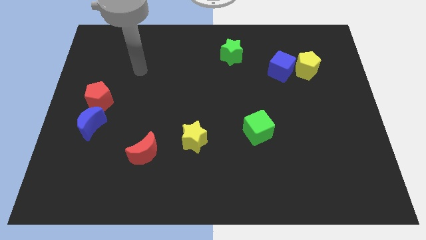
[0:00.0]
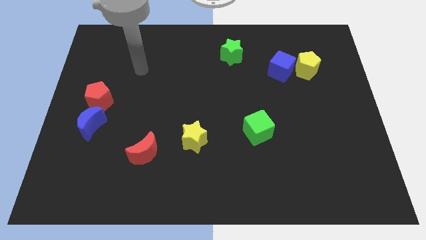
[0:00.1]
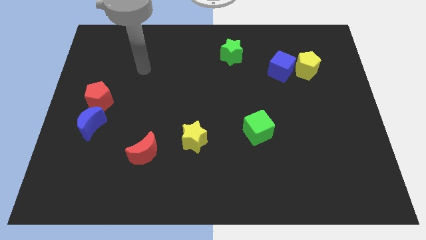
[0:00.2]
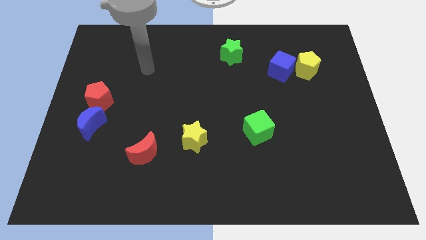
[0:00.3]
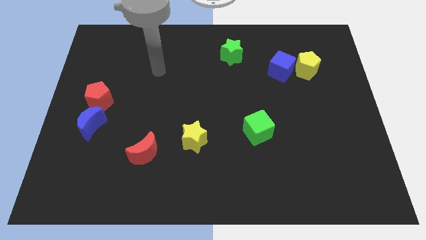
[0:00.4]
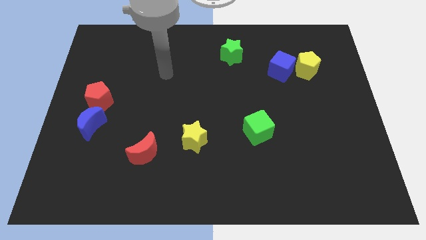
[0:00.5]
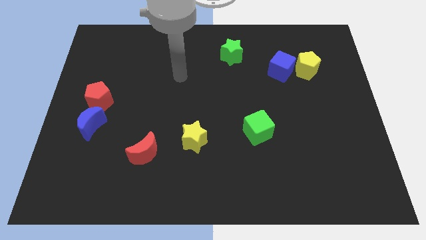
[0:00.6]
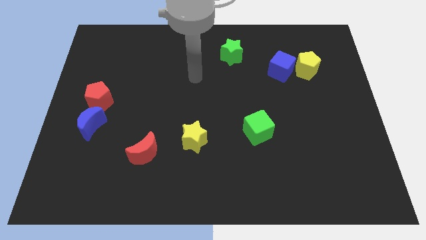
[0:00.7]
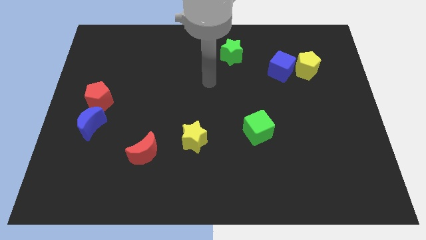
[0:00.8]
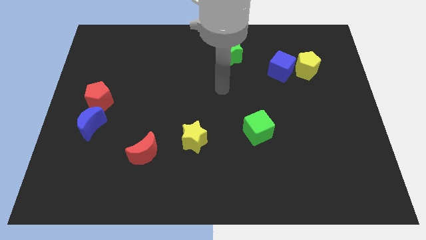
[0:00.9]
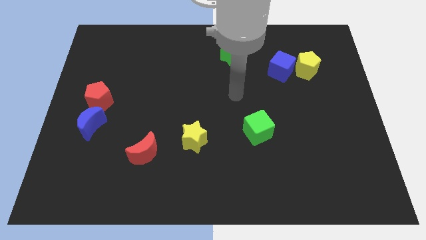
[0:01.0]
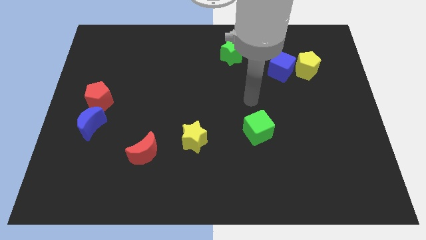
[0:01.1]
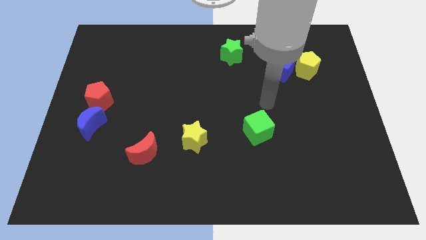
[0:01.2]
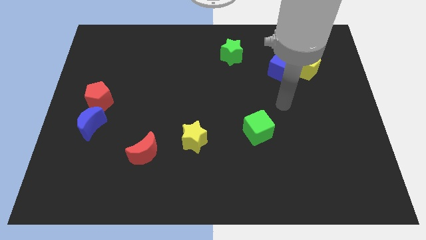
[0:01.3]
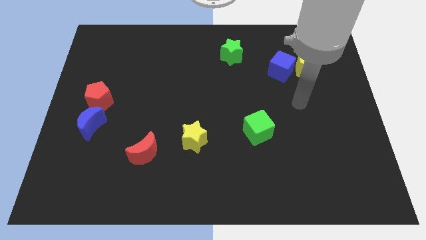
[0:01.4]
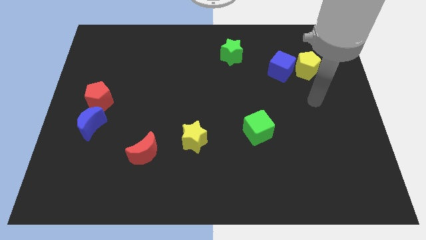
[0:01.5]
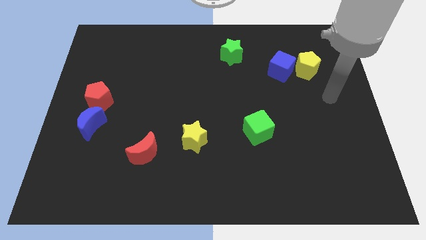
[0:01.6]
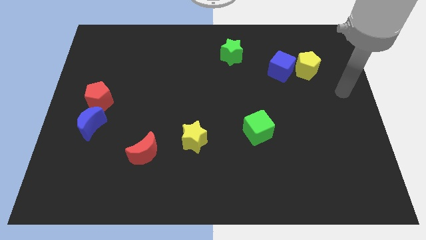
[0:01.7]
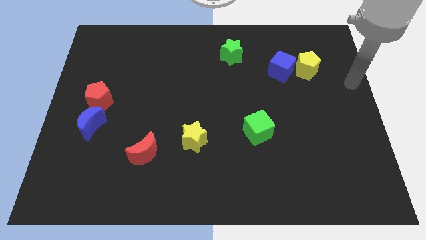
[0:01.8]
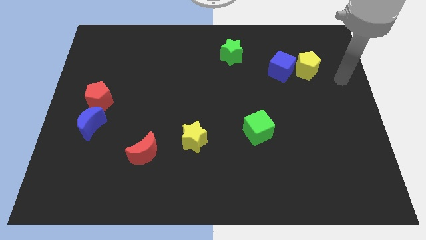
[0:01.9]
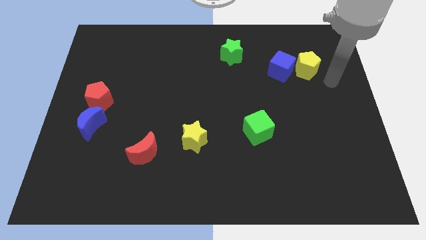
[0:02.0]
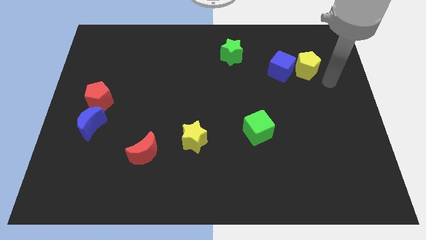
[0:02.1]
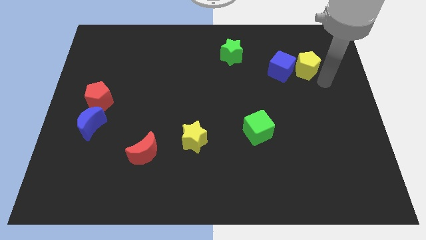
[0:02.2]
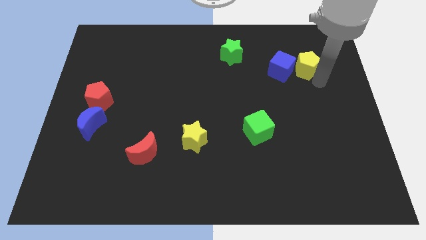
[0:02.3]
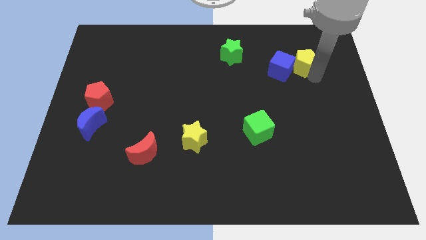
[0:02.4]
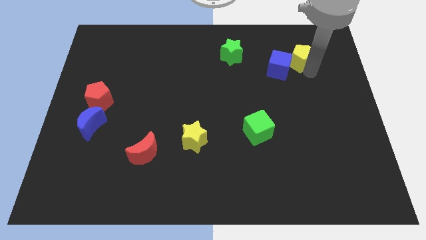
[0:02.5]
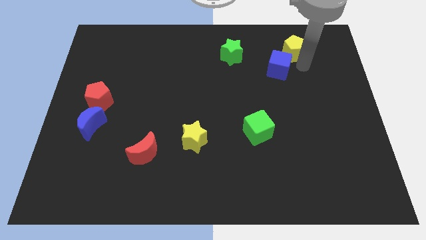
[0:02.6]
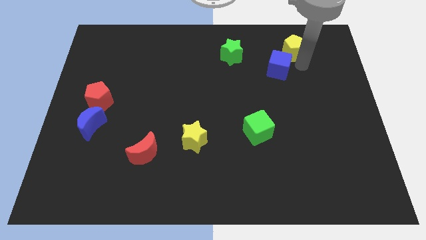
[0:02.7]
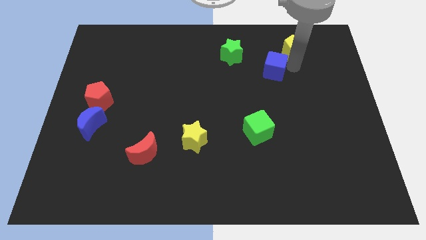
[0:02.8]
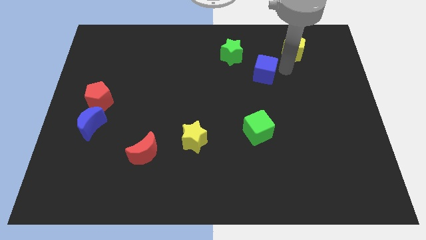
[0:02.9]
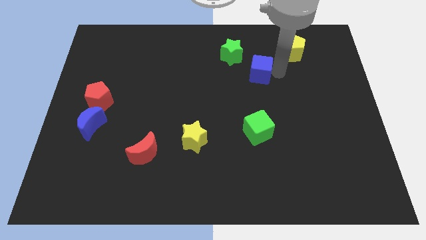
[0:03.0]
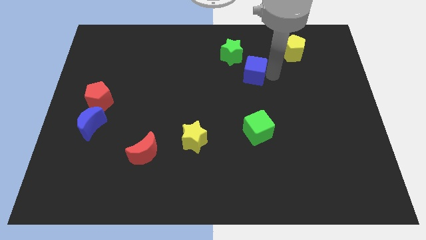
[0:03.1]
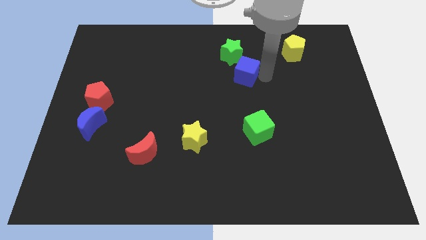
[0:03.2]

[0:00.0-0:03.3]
separate the yellow pentagon and blue cube from each other

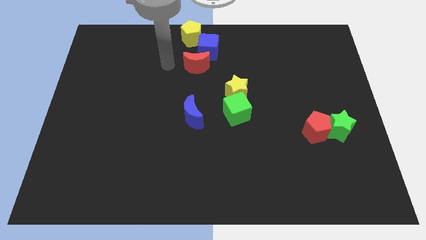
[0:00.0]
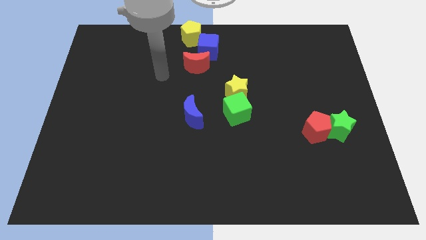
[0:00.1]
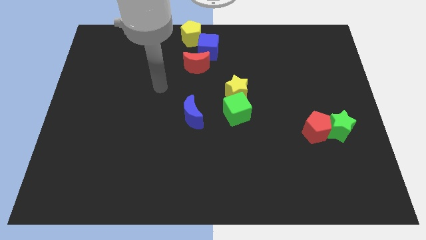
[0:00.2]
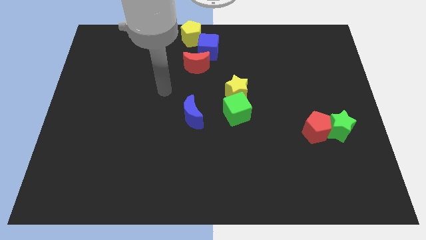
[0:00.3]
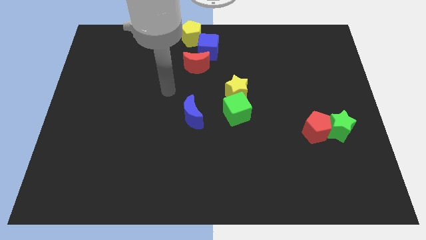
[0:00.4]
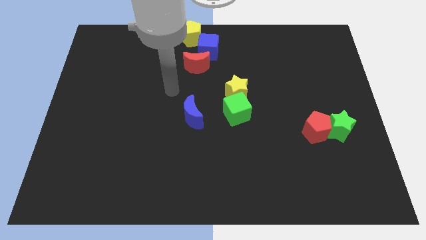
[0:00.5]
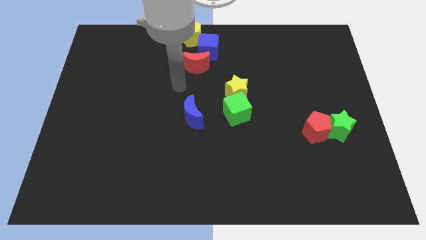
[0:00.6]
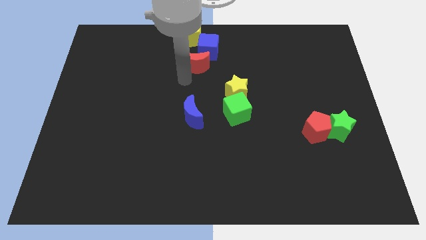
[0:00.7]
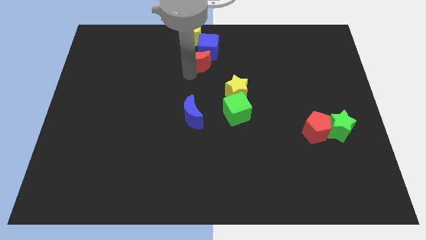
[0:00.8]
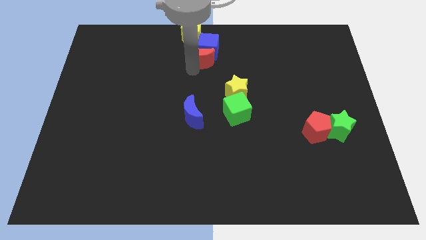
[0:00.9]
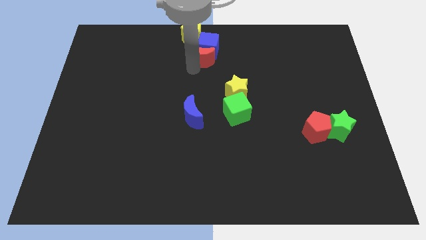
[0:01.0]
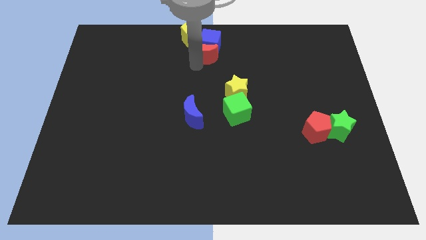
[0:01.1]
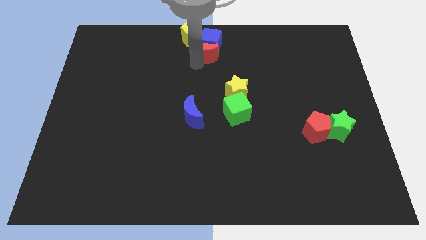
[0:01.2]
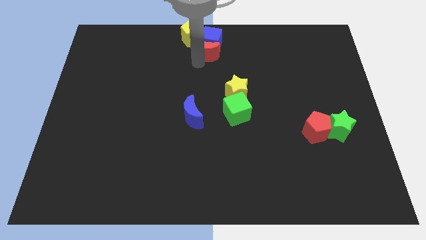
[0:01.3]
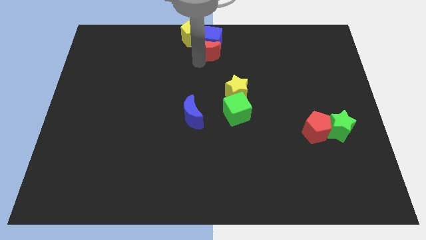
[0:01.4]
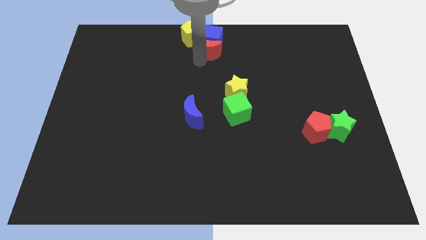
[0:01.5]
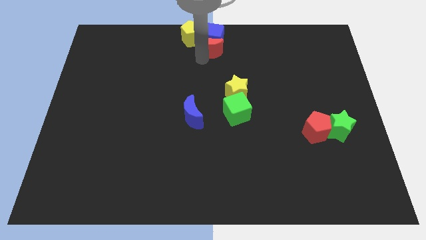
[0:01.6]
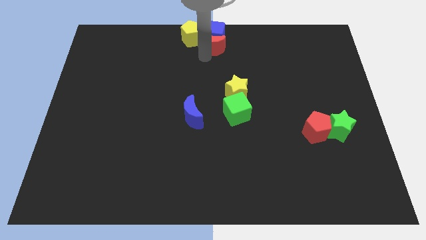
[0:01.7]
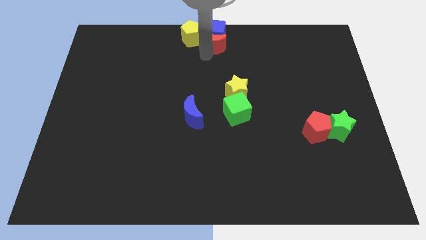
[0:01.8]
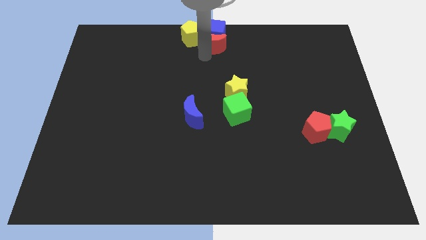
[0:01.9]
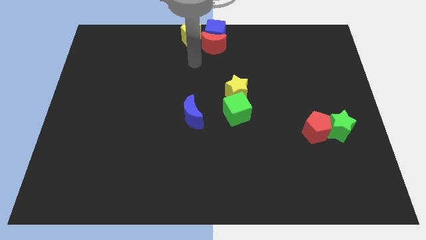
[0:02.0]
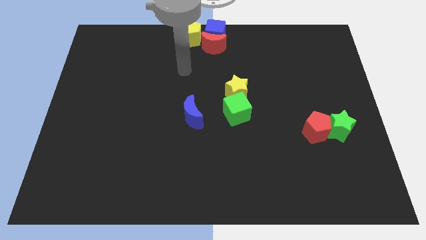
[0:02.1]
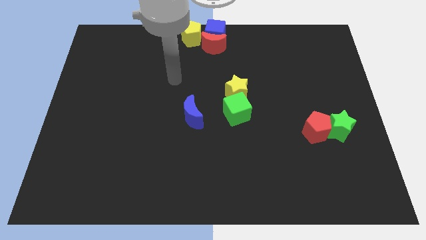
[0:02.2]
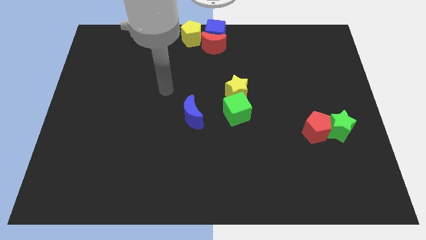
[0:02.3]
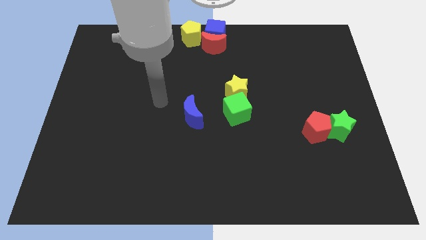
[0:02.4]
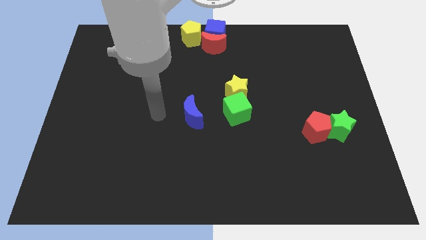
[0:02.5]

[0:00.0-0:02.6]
move the yellow pentagon blue cube and the red crescent to the top center of the board

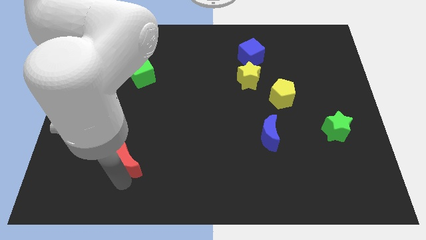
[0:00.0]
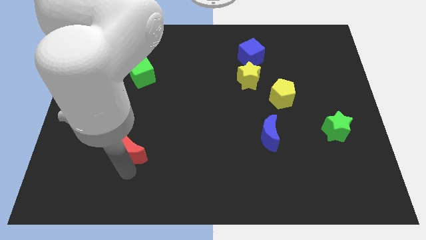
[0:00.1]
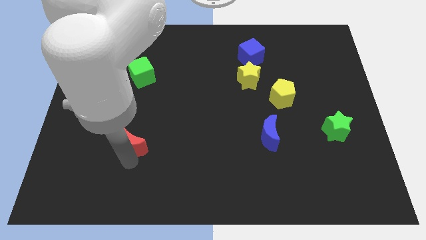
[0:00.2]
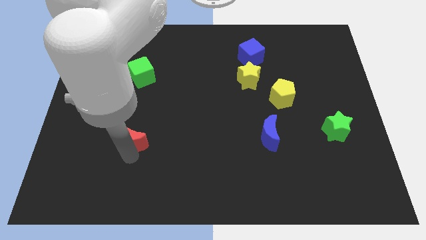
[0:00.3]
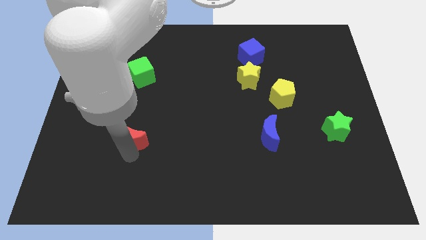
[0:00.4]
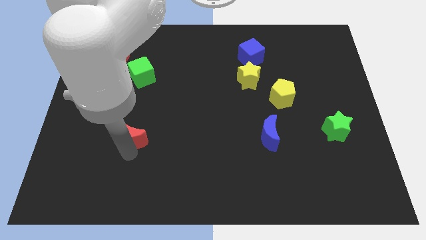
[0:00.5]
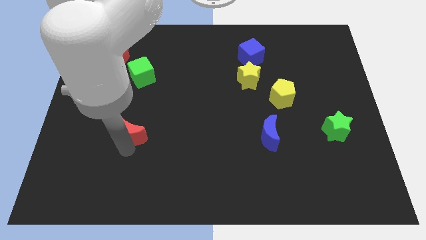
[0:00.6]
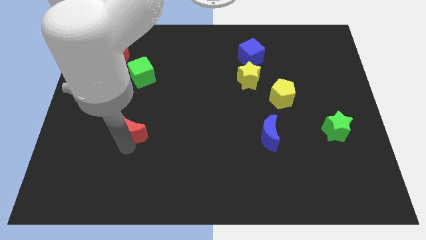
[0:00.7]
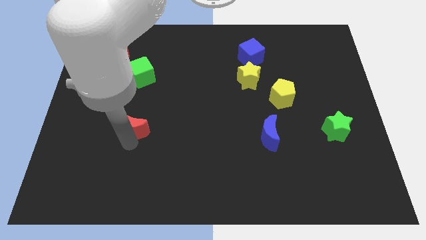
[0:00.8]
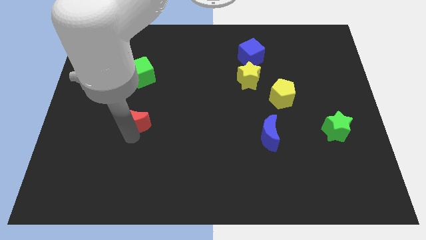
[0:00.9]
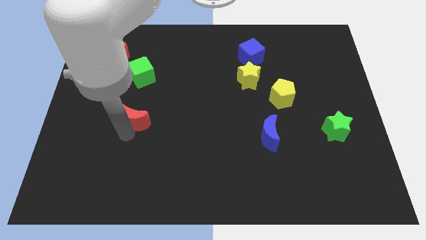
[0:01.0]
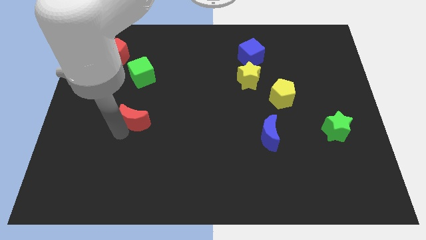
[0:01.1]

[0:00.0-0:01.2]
push the red moon to the center of the board

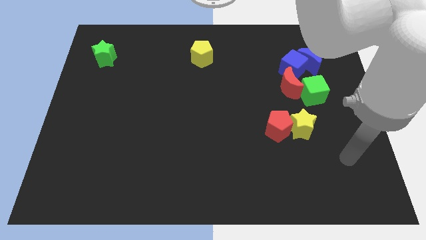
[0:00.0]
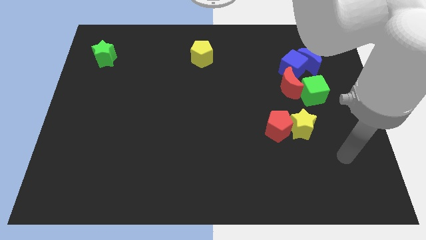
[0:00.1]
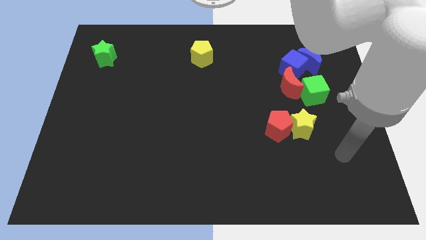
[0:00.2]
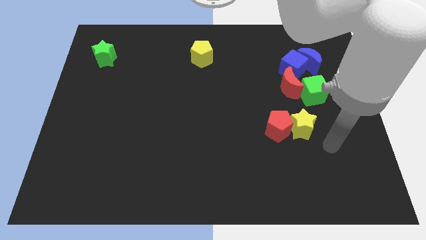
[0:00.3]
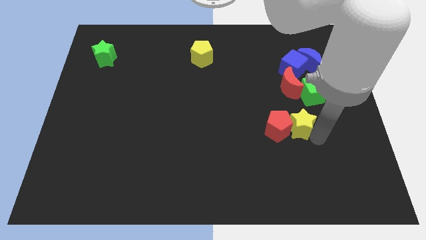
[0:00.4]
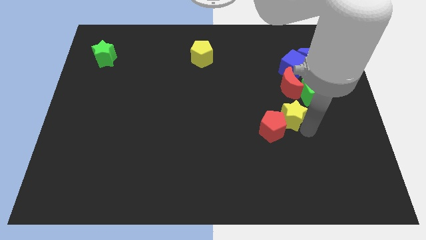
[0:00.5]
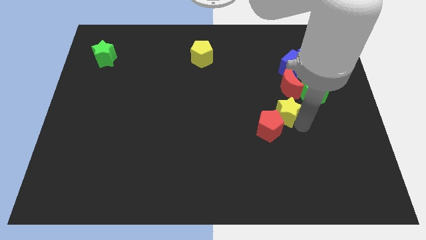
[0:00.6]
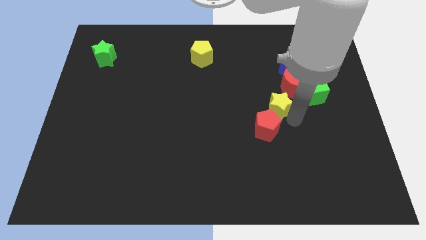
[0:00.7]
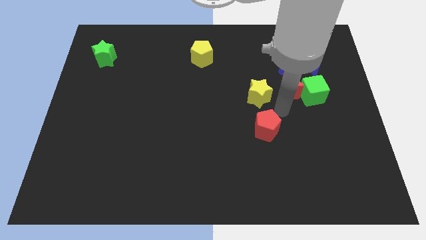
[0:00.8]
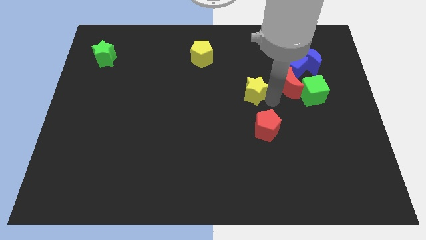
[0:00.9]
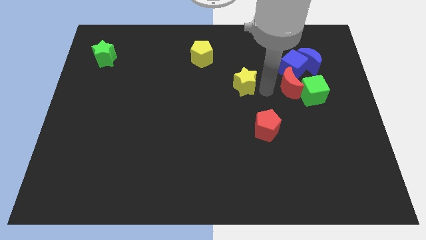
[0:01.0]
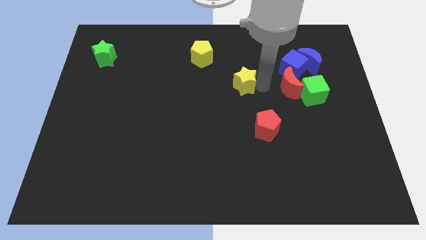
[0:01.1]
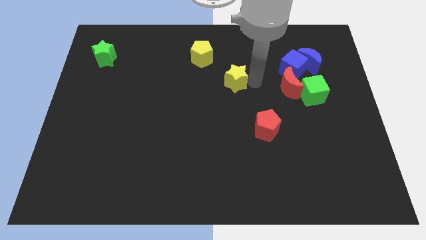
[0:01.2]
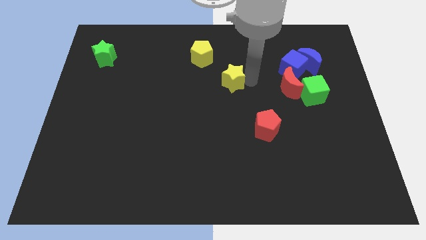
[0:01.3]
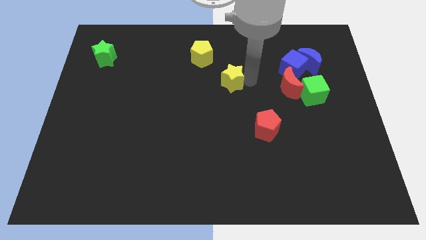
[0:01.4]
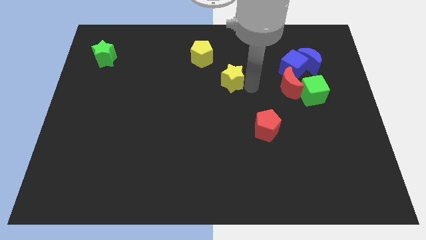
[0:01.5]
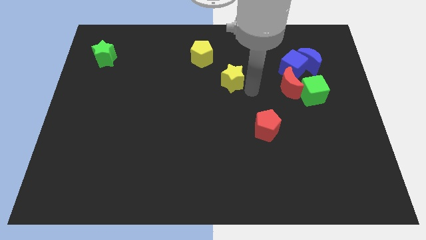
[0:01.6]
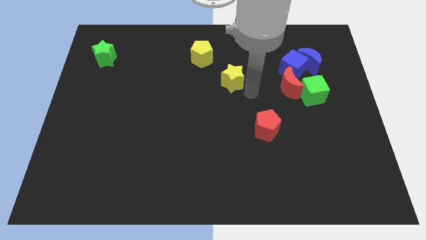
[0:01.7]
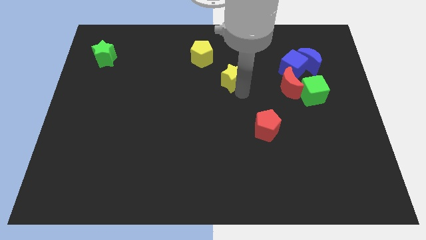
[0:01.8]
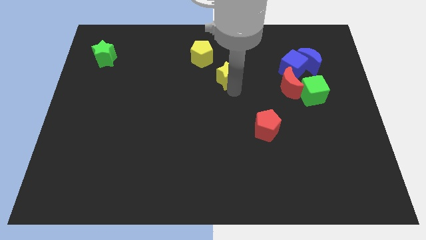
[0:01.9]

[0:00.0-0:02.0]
move the yellow star to the bottom right of the yellow pentagon
